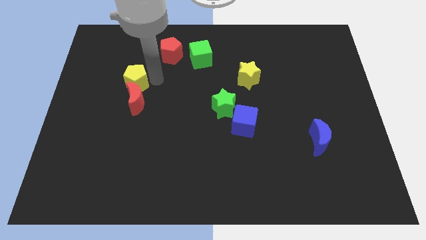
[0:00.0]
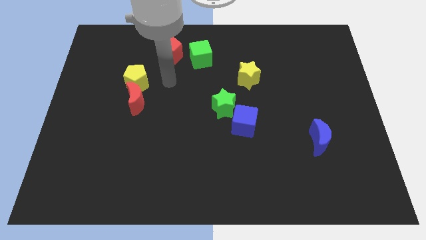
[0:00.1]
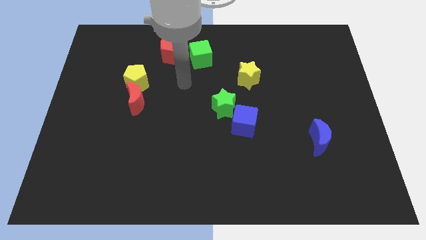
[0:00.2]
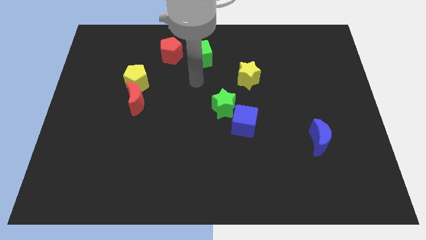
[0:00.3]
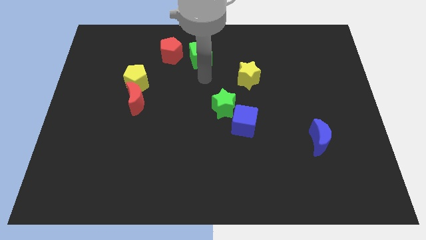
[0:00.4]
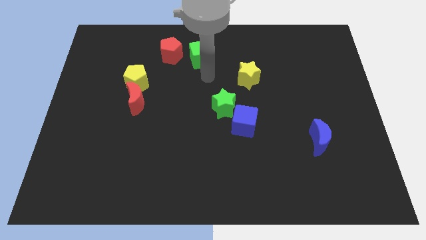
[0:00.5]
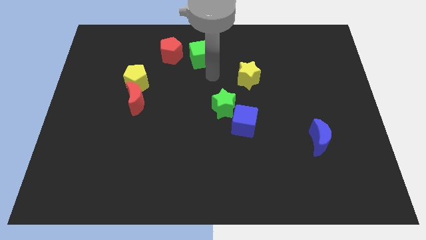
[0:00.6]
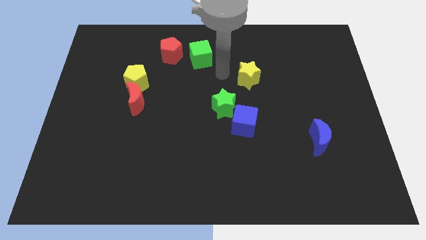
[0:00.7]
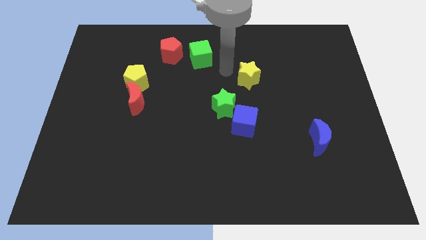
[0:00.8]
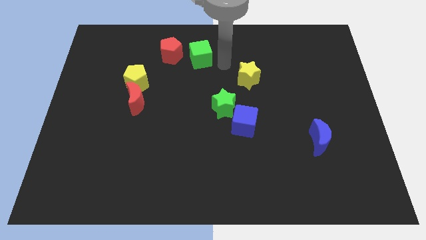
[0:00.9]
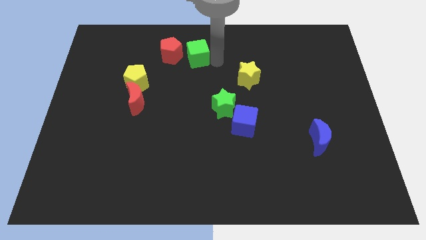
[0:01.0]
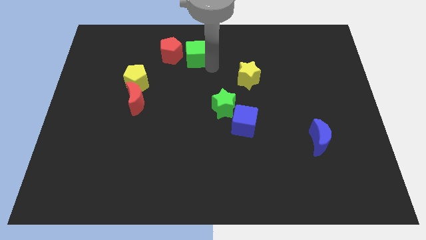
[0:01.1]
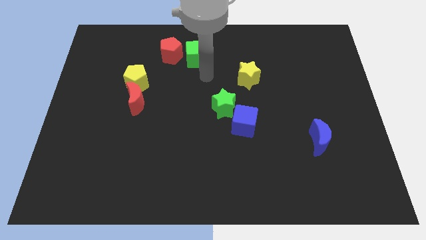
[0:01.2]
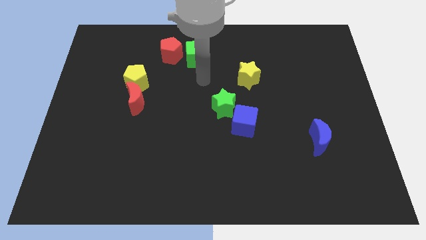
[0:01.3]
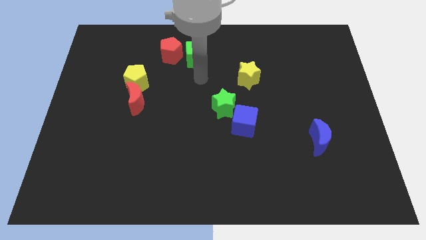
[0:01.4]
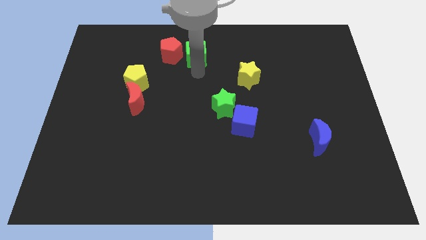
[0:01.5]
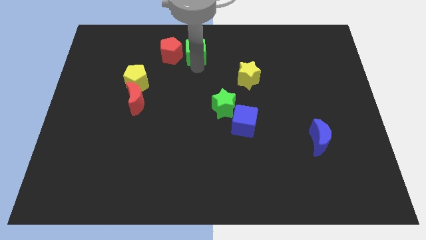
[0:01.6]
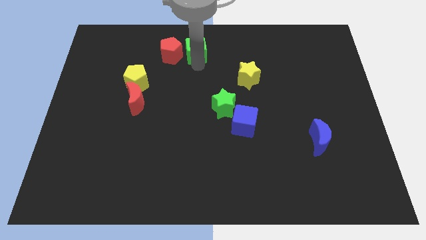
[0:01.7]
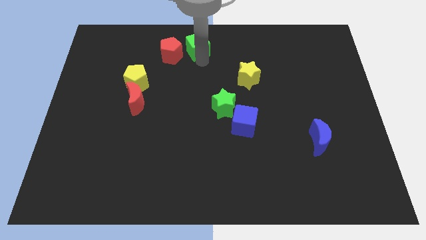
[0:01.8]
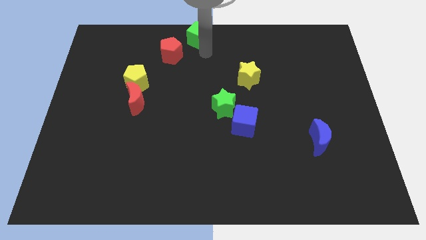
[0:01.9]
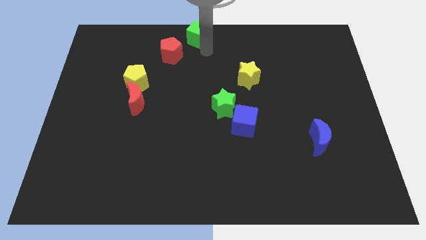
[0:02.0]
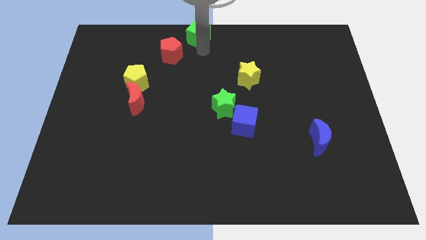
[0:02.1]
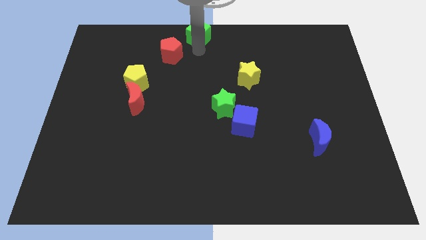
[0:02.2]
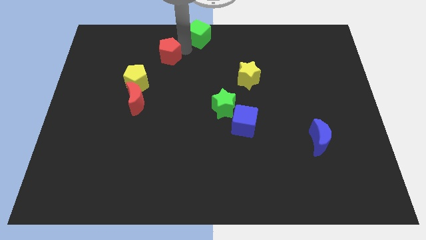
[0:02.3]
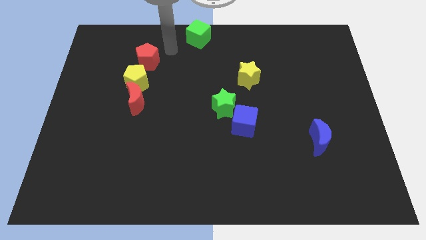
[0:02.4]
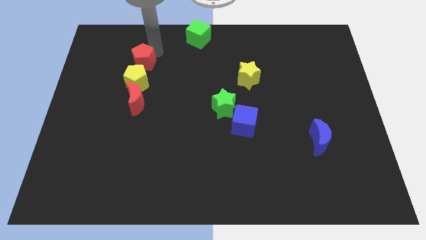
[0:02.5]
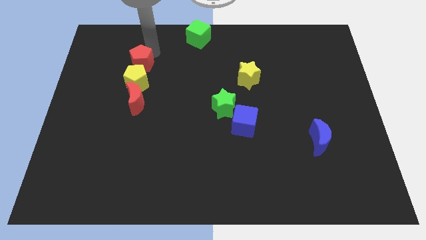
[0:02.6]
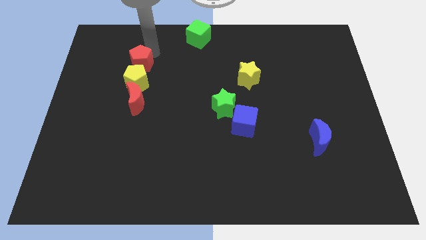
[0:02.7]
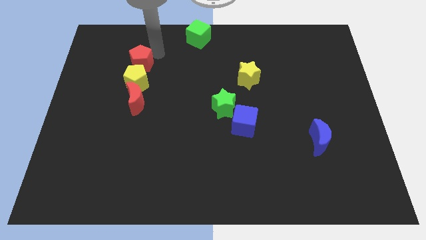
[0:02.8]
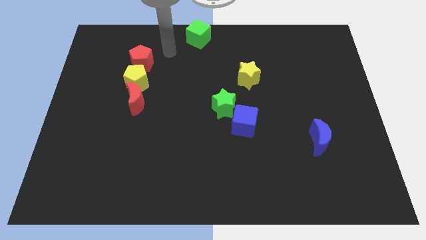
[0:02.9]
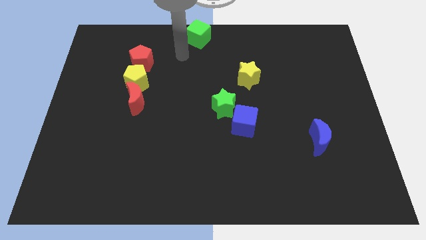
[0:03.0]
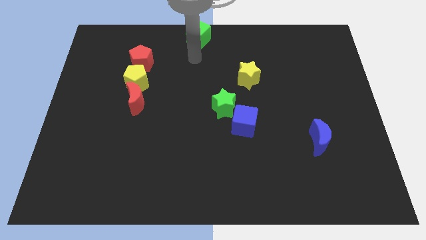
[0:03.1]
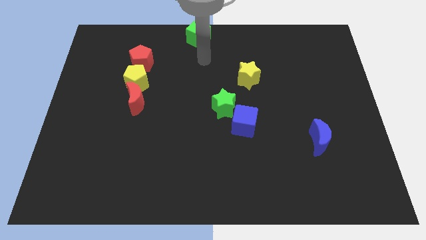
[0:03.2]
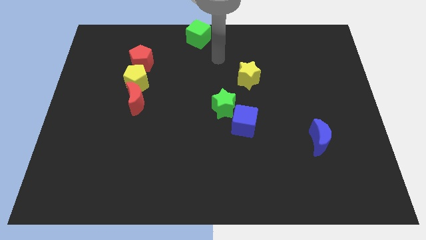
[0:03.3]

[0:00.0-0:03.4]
separate the green cube and red pentagon from each other

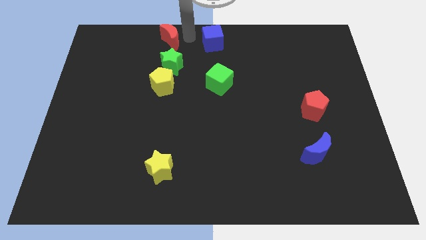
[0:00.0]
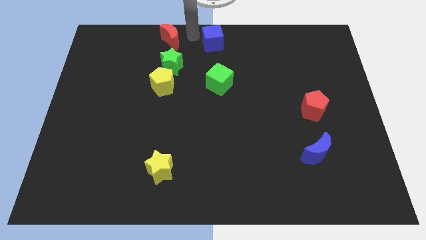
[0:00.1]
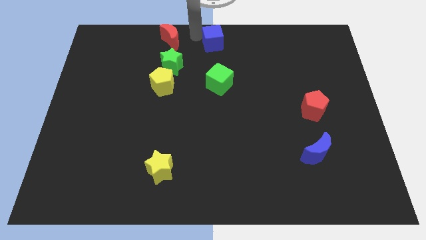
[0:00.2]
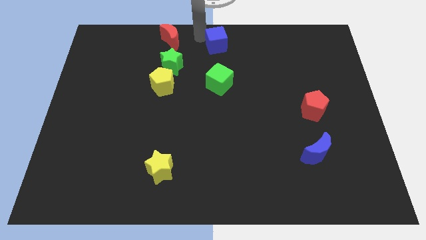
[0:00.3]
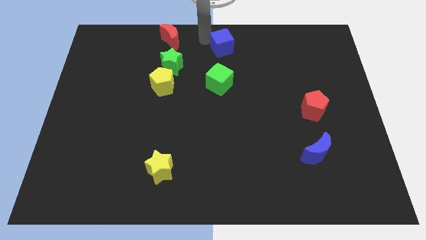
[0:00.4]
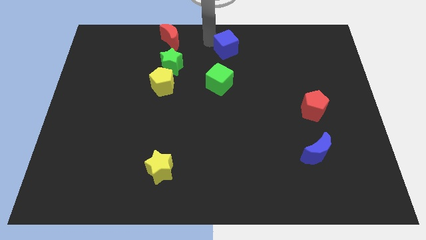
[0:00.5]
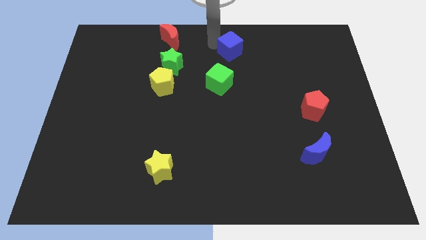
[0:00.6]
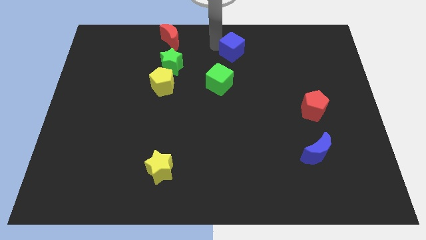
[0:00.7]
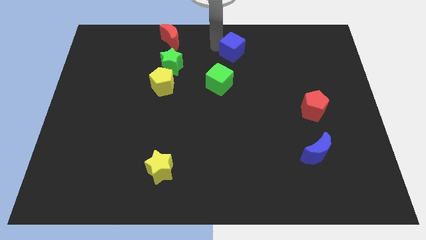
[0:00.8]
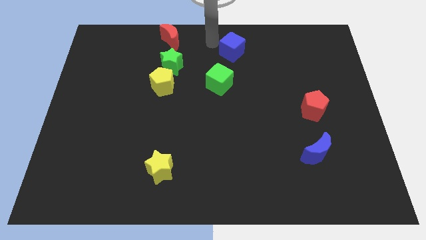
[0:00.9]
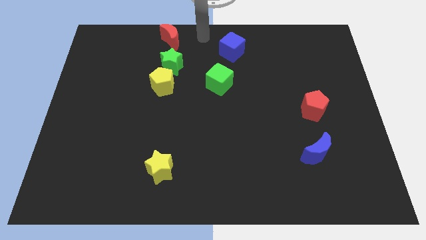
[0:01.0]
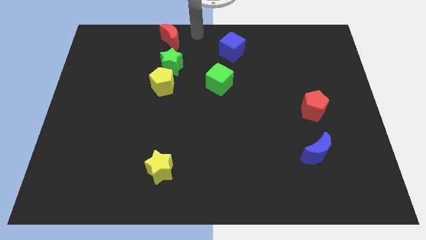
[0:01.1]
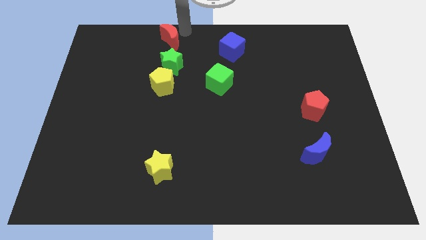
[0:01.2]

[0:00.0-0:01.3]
slide the blue cube to the top right side of the green cube

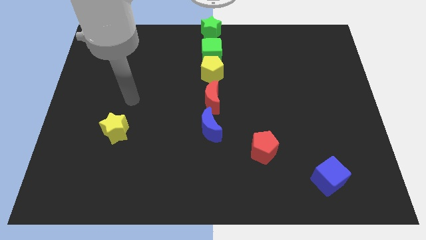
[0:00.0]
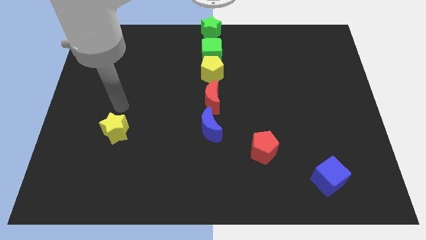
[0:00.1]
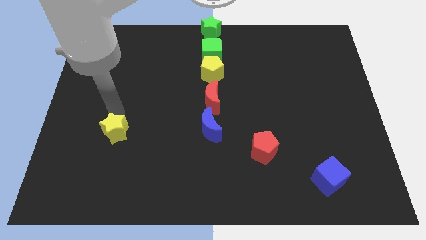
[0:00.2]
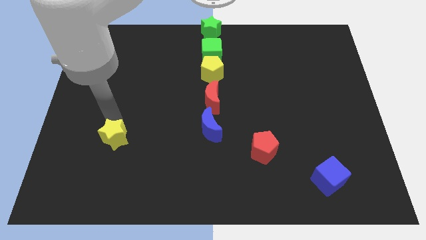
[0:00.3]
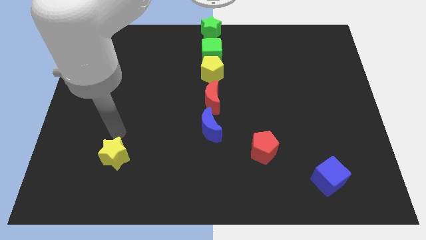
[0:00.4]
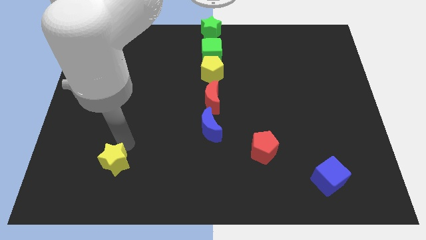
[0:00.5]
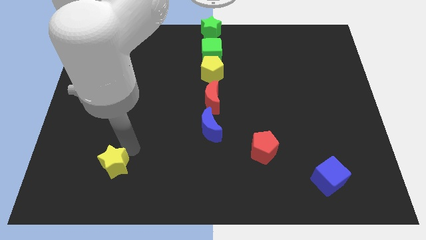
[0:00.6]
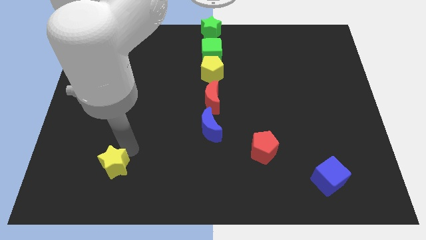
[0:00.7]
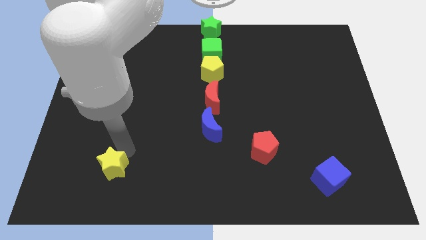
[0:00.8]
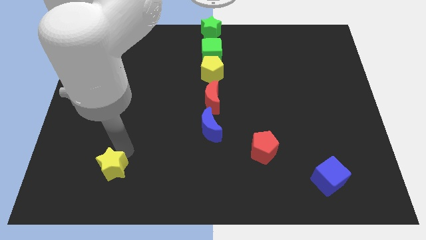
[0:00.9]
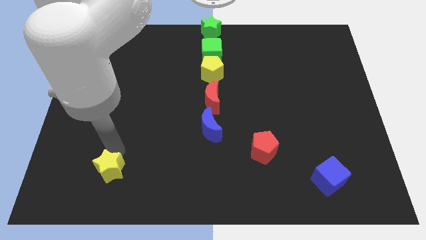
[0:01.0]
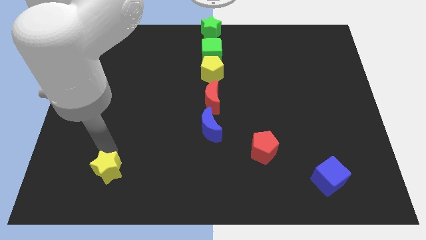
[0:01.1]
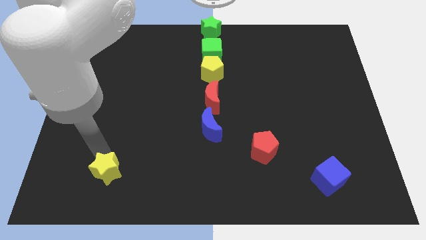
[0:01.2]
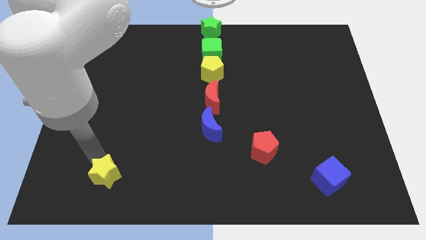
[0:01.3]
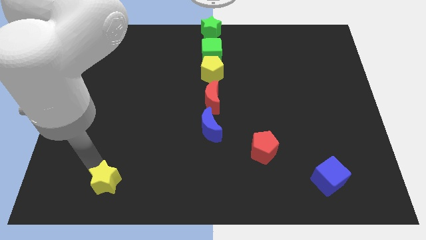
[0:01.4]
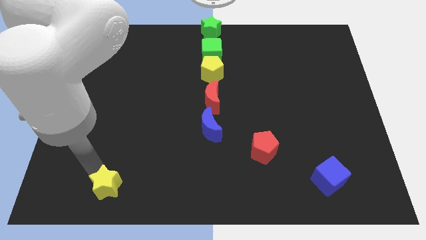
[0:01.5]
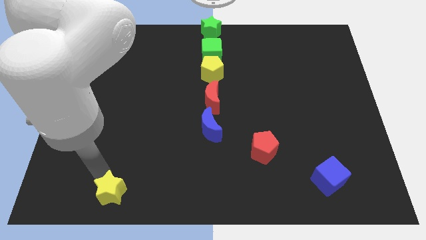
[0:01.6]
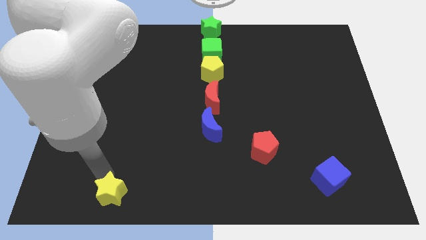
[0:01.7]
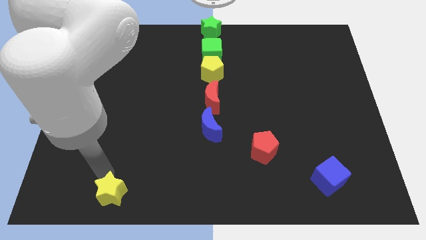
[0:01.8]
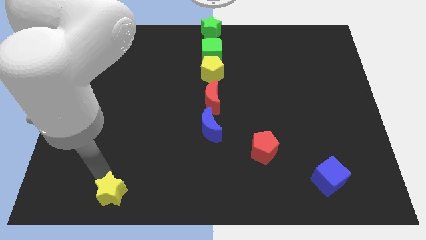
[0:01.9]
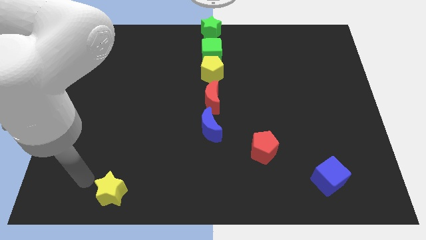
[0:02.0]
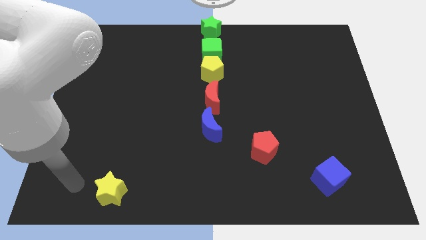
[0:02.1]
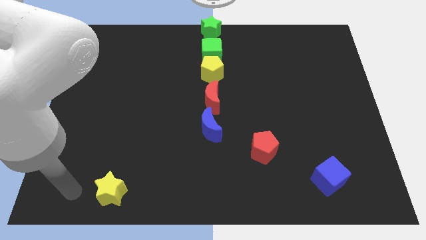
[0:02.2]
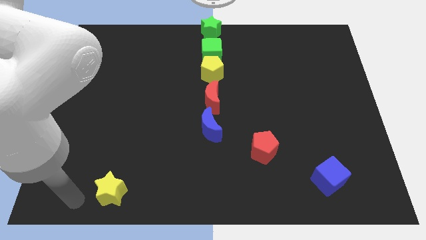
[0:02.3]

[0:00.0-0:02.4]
move the yellow star towards the bottom side

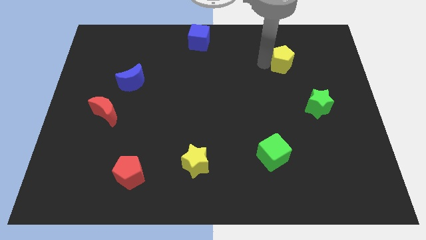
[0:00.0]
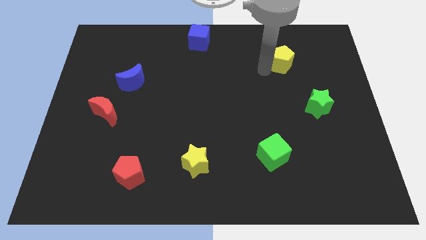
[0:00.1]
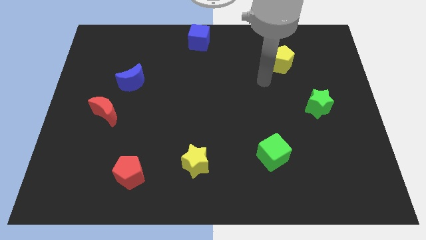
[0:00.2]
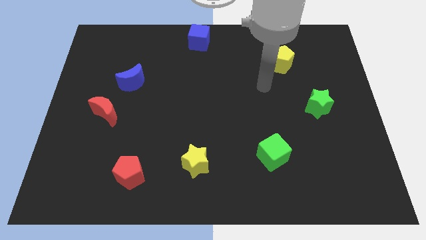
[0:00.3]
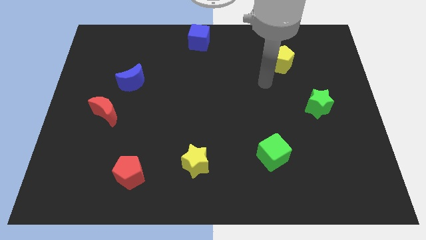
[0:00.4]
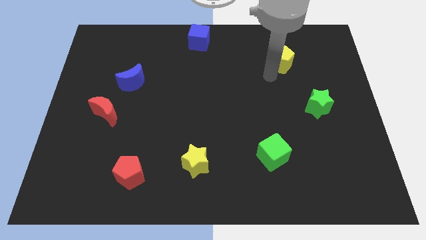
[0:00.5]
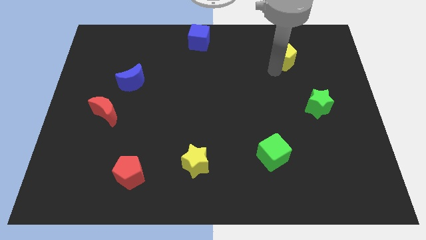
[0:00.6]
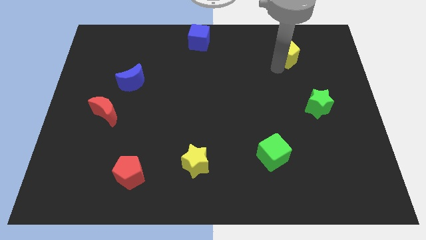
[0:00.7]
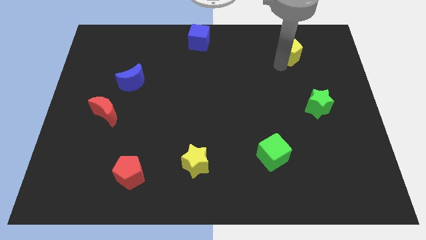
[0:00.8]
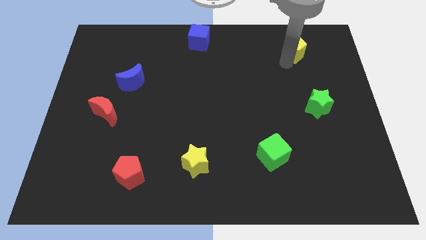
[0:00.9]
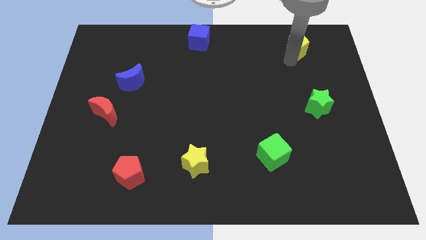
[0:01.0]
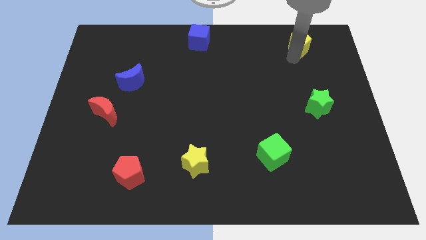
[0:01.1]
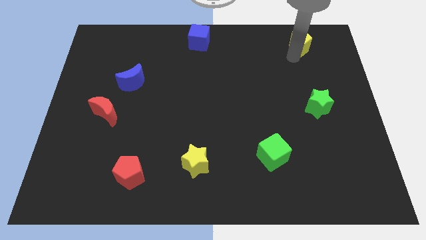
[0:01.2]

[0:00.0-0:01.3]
move the yellow pentagon to the top right of the board

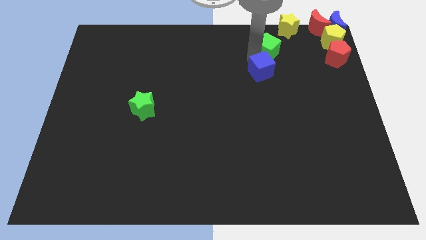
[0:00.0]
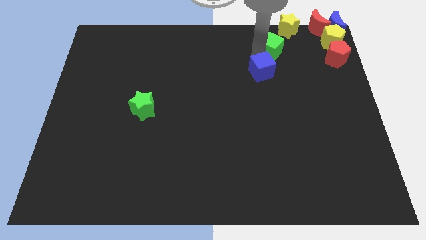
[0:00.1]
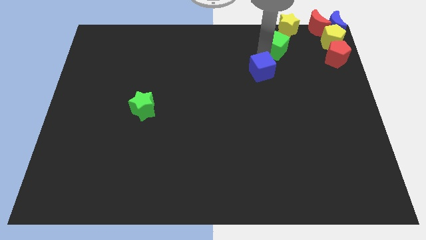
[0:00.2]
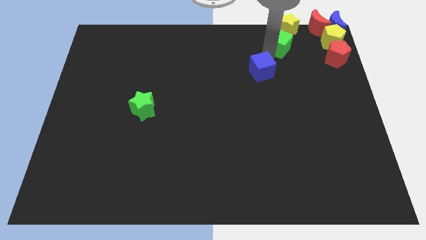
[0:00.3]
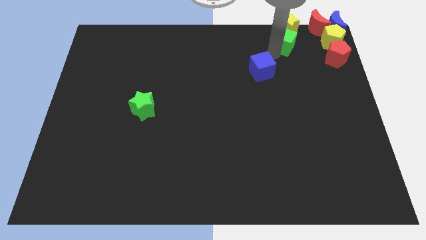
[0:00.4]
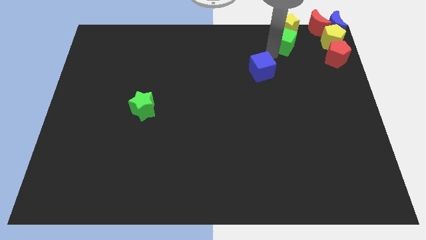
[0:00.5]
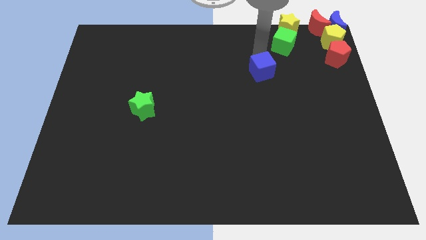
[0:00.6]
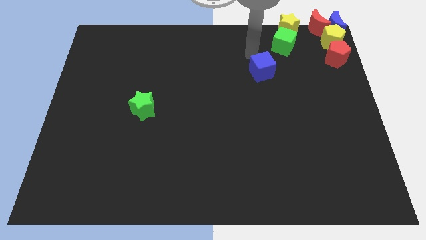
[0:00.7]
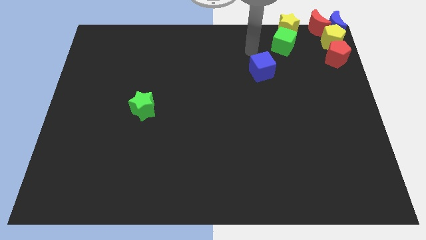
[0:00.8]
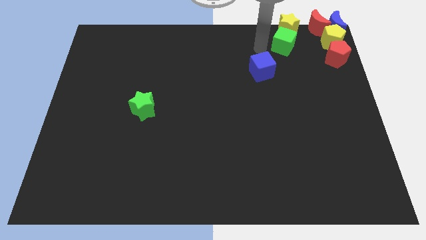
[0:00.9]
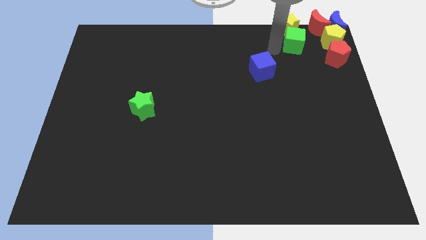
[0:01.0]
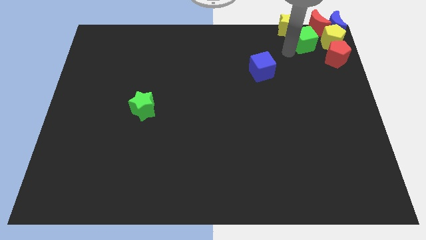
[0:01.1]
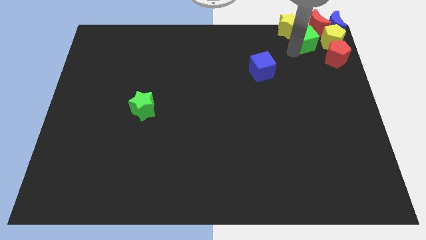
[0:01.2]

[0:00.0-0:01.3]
place the green cube towards the yellow pentagon
